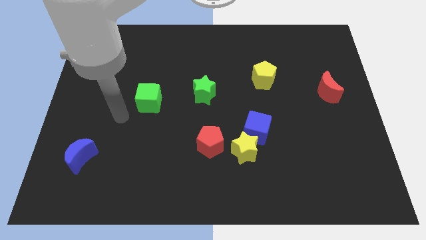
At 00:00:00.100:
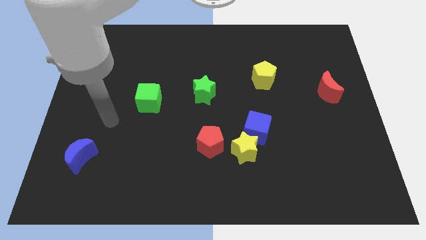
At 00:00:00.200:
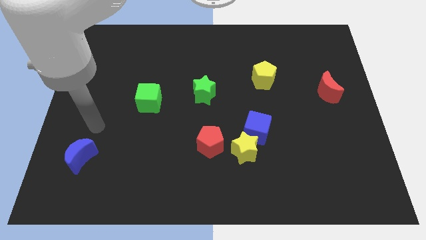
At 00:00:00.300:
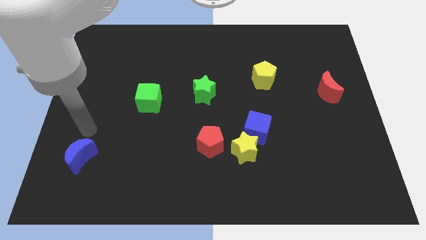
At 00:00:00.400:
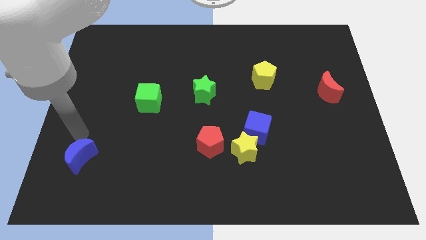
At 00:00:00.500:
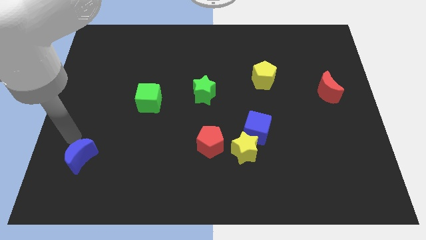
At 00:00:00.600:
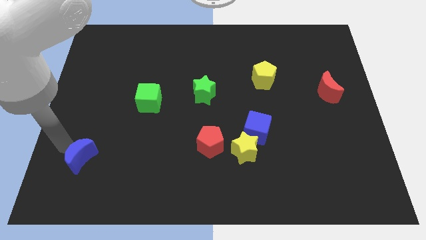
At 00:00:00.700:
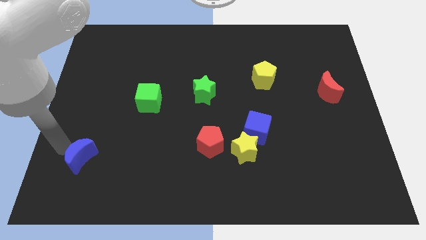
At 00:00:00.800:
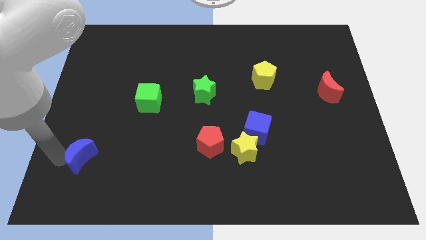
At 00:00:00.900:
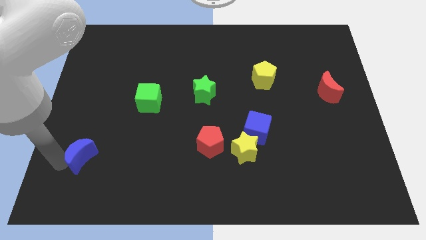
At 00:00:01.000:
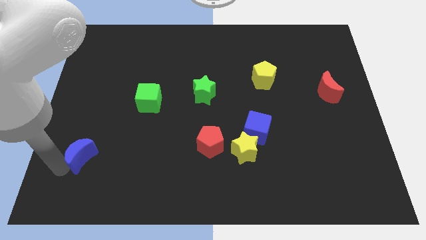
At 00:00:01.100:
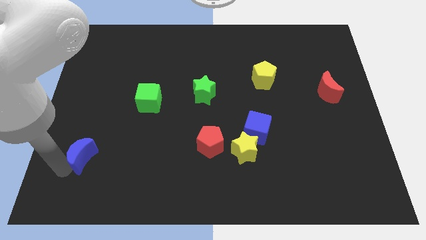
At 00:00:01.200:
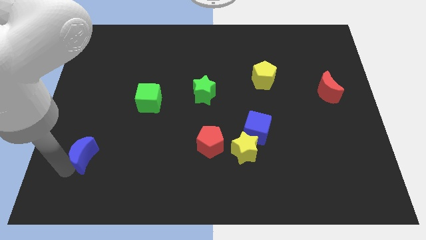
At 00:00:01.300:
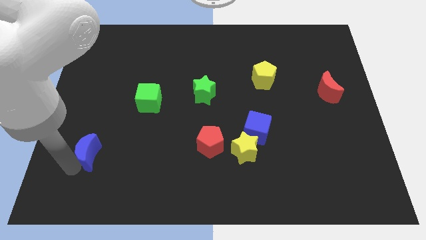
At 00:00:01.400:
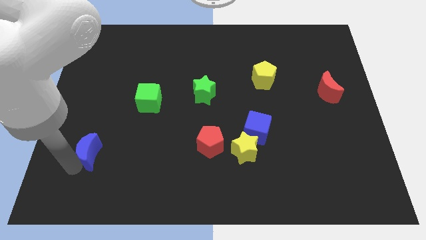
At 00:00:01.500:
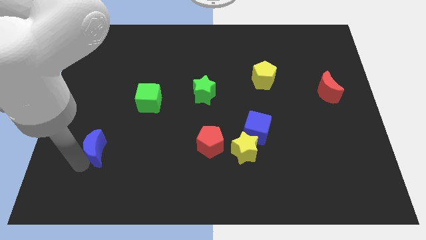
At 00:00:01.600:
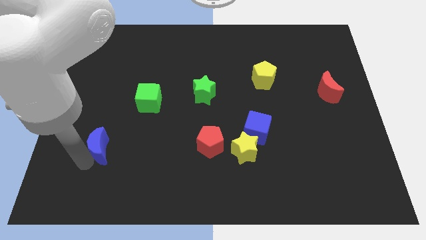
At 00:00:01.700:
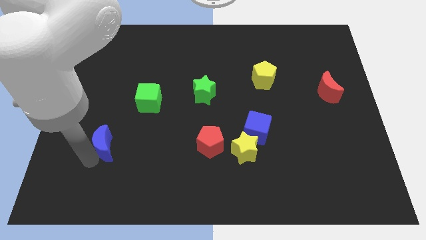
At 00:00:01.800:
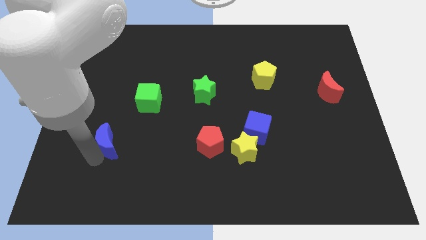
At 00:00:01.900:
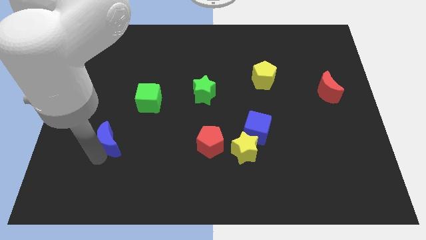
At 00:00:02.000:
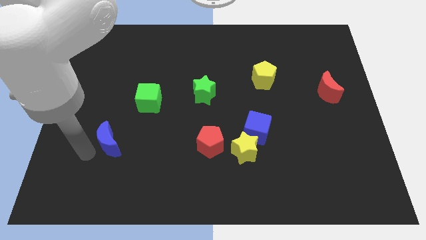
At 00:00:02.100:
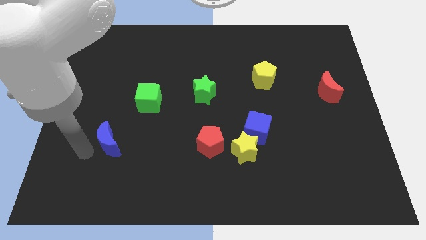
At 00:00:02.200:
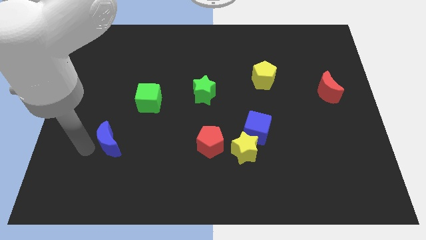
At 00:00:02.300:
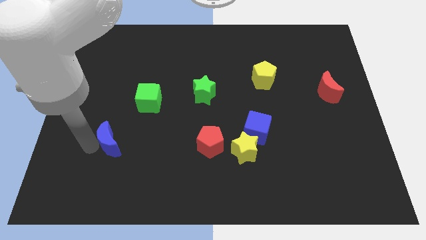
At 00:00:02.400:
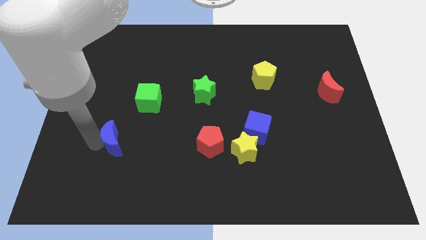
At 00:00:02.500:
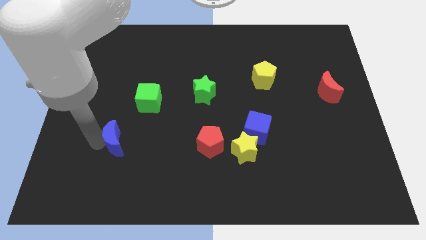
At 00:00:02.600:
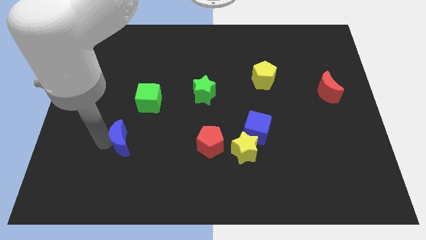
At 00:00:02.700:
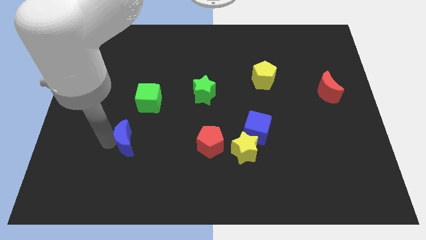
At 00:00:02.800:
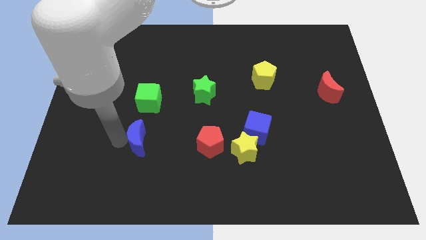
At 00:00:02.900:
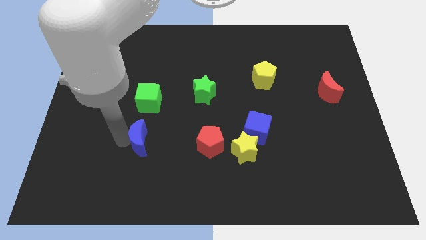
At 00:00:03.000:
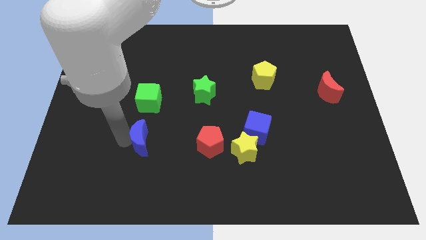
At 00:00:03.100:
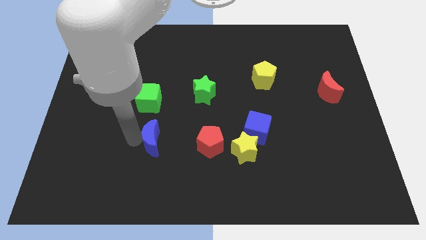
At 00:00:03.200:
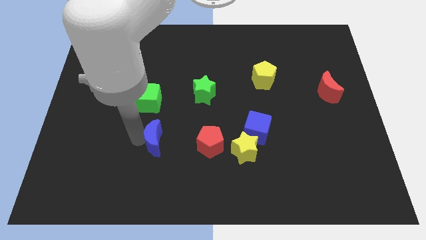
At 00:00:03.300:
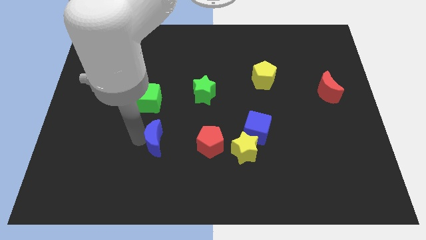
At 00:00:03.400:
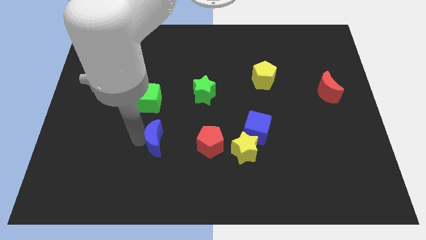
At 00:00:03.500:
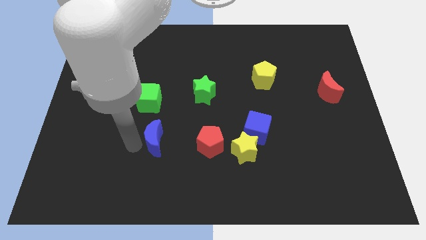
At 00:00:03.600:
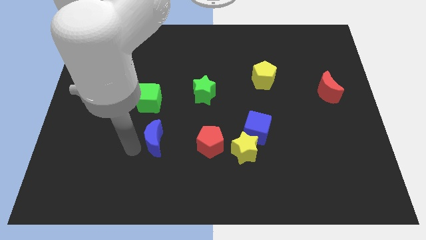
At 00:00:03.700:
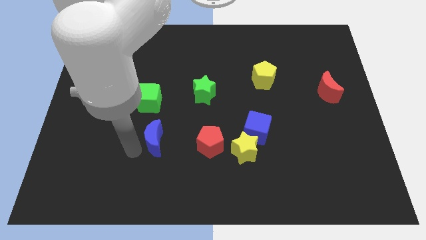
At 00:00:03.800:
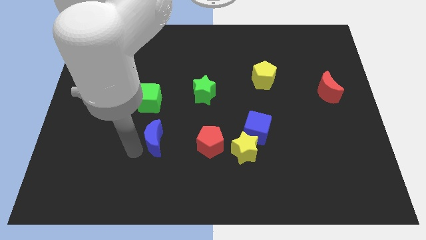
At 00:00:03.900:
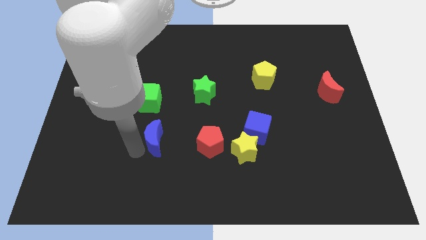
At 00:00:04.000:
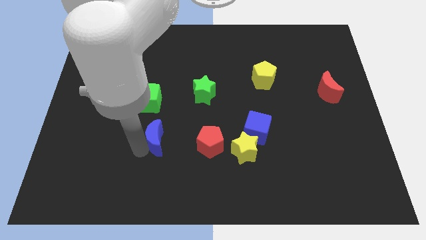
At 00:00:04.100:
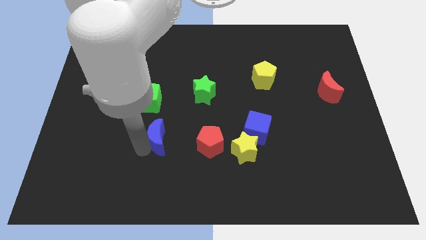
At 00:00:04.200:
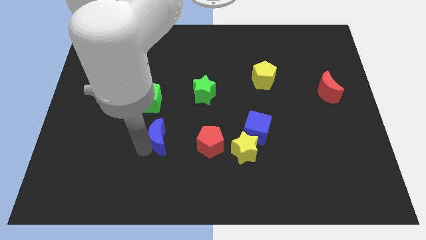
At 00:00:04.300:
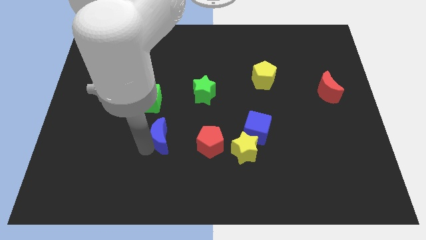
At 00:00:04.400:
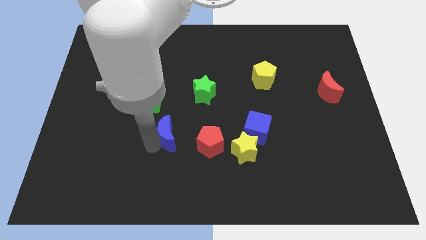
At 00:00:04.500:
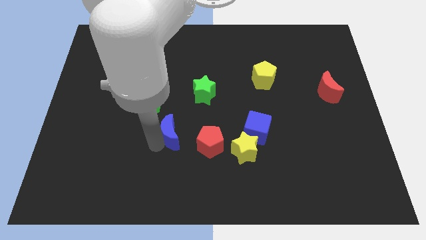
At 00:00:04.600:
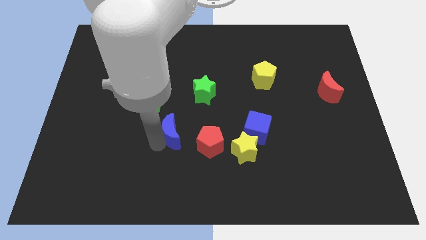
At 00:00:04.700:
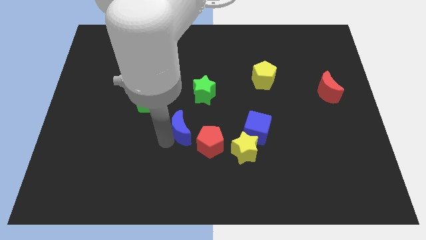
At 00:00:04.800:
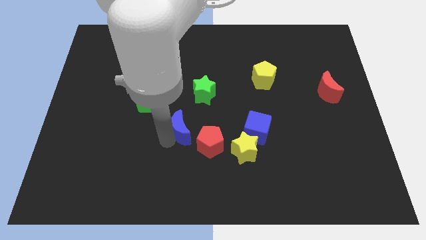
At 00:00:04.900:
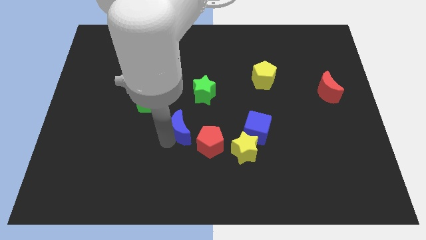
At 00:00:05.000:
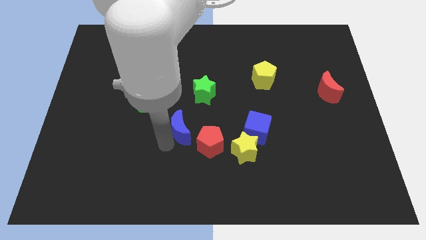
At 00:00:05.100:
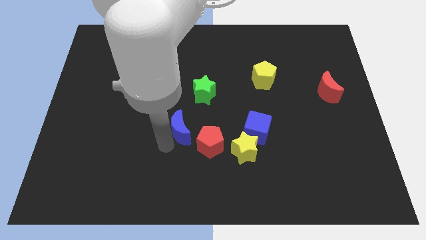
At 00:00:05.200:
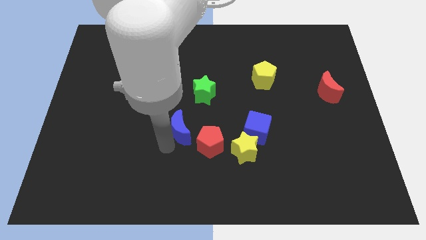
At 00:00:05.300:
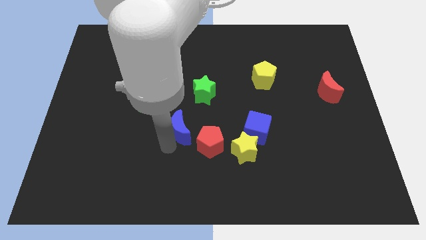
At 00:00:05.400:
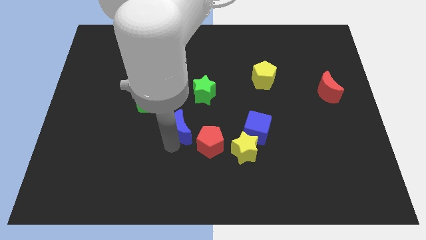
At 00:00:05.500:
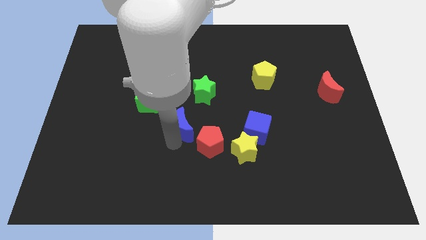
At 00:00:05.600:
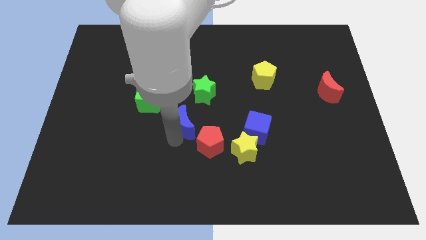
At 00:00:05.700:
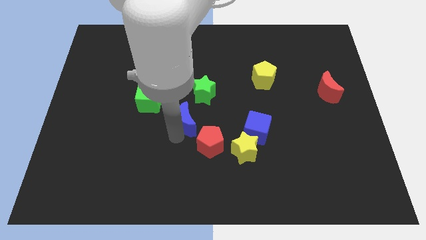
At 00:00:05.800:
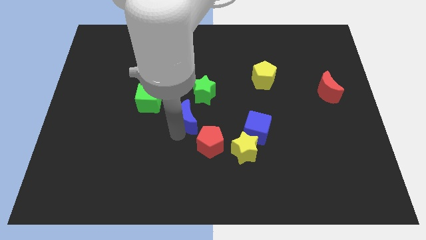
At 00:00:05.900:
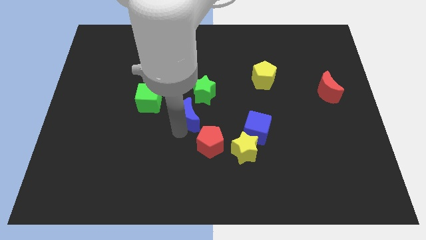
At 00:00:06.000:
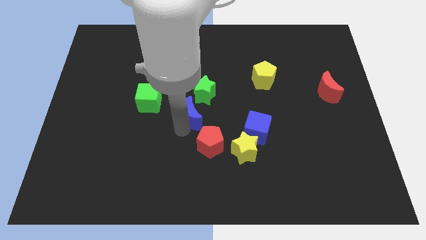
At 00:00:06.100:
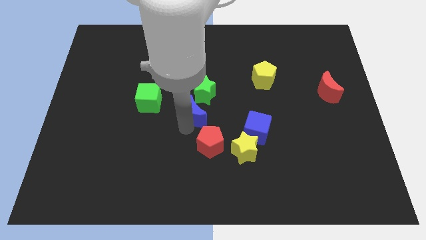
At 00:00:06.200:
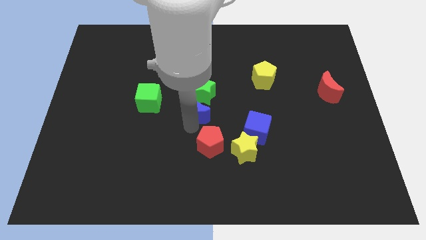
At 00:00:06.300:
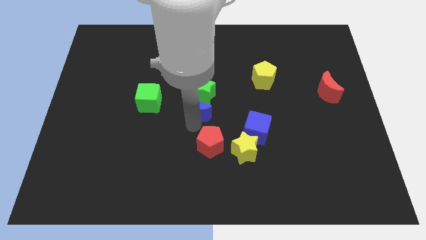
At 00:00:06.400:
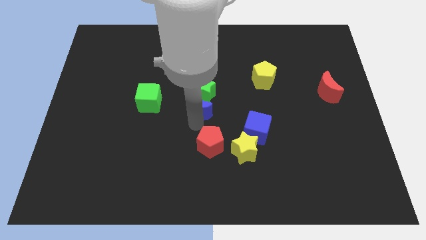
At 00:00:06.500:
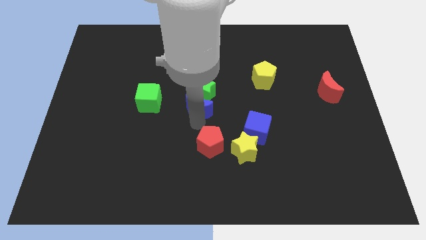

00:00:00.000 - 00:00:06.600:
push the blue moon close to the green star

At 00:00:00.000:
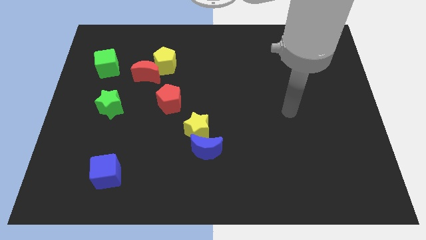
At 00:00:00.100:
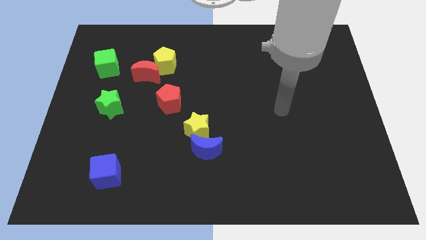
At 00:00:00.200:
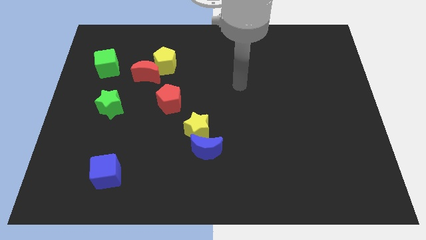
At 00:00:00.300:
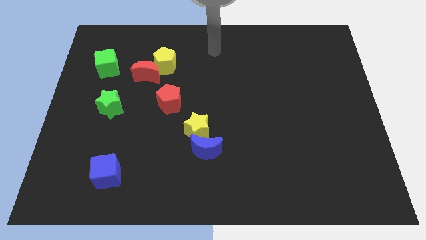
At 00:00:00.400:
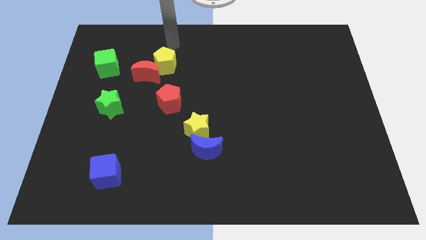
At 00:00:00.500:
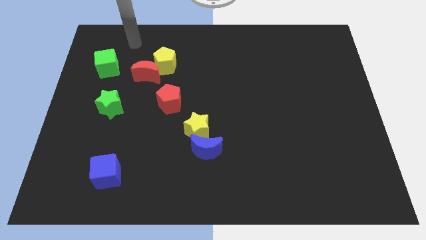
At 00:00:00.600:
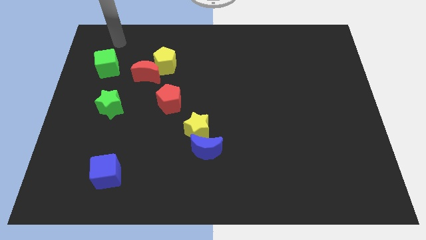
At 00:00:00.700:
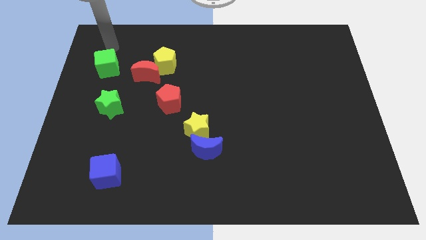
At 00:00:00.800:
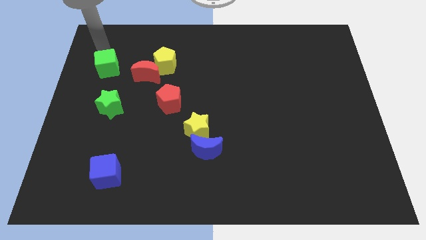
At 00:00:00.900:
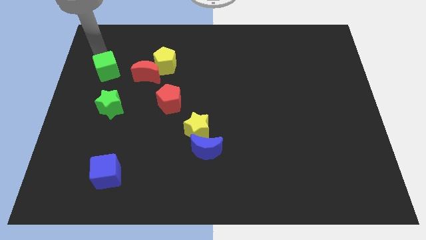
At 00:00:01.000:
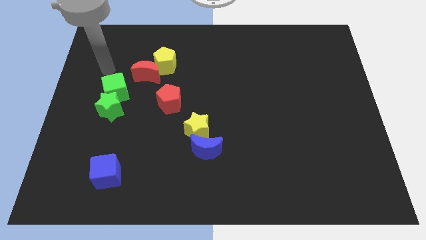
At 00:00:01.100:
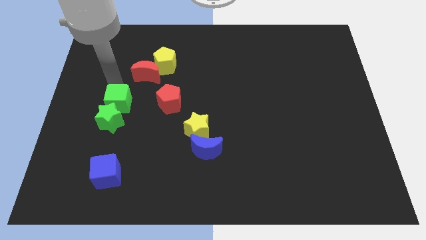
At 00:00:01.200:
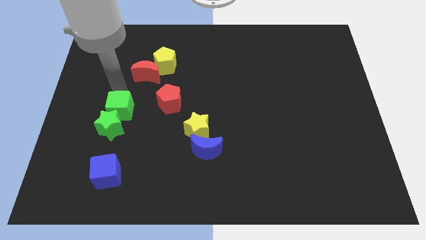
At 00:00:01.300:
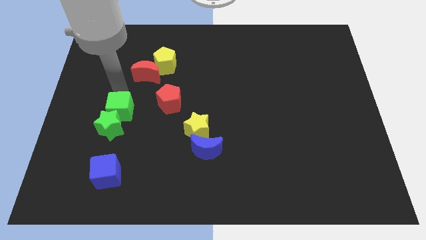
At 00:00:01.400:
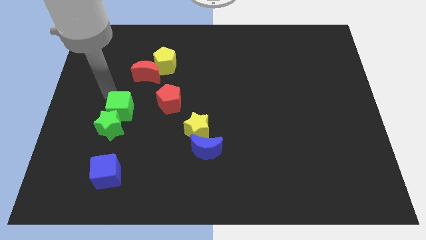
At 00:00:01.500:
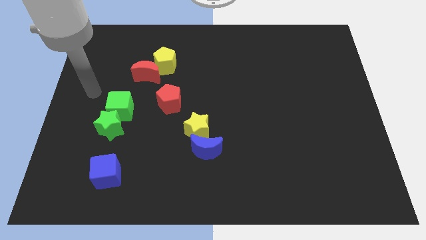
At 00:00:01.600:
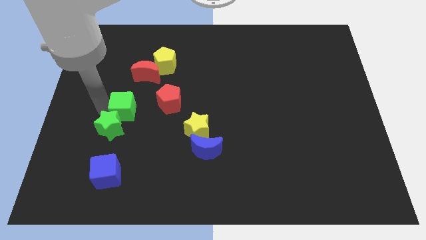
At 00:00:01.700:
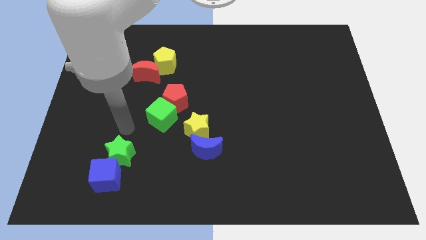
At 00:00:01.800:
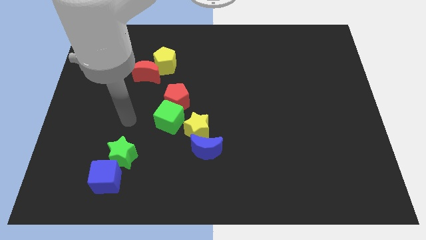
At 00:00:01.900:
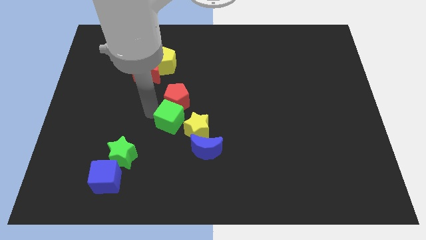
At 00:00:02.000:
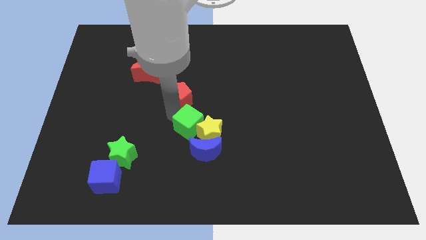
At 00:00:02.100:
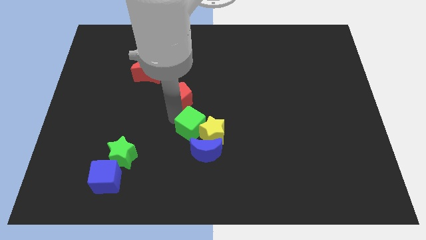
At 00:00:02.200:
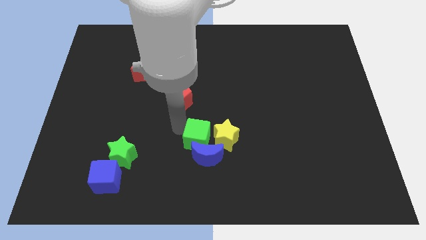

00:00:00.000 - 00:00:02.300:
put the green cube towards the yellow star
